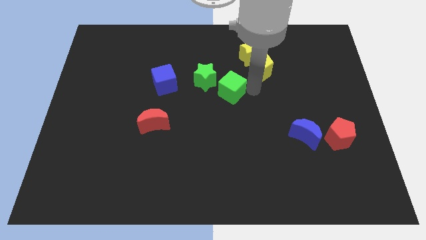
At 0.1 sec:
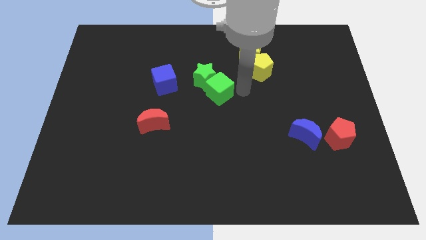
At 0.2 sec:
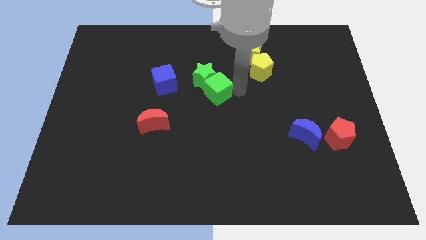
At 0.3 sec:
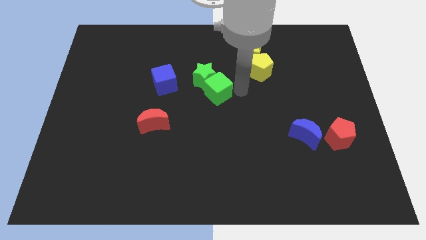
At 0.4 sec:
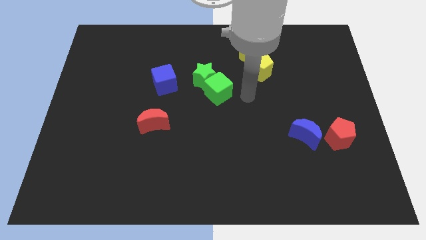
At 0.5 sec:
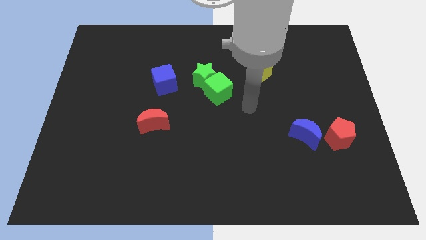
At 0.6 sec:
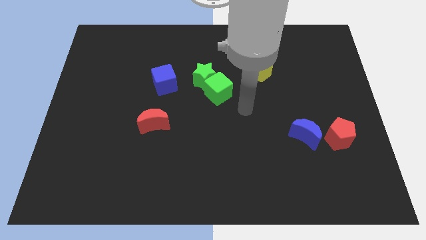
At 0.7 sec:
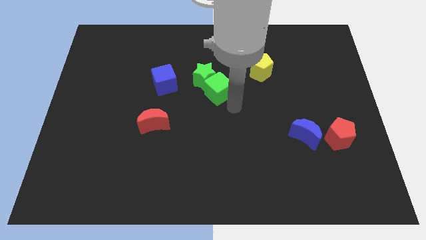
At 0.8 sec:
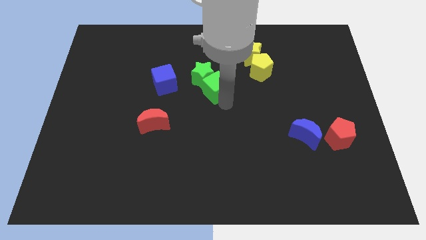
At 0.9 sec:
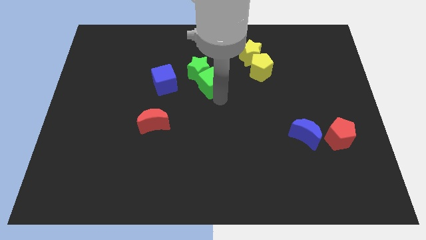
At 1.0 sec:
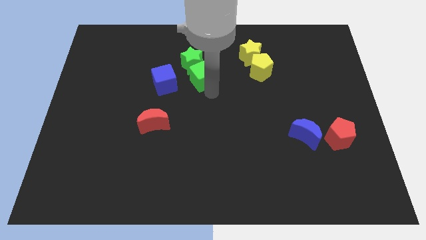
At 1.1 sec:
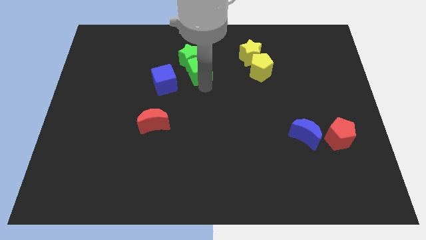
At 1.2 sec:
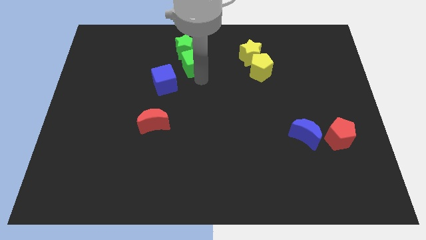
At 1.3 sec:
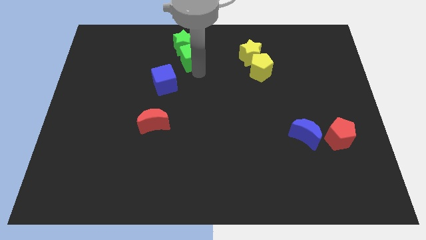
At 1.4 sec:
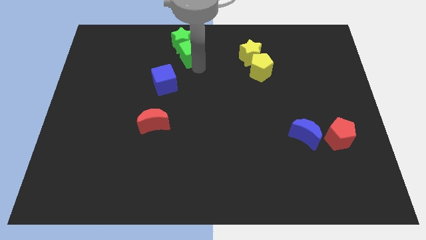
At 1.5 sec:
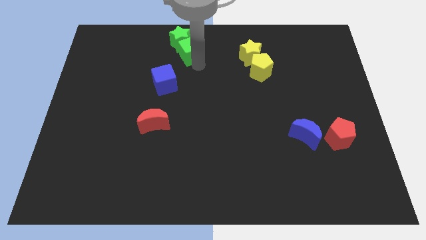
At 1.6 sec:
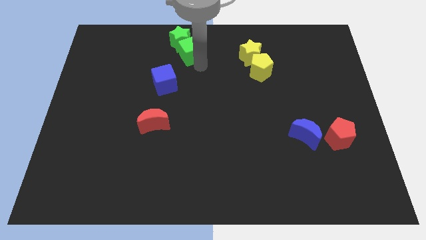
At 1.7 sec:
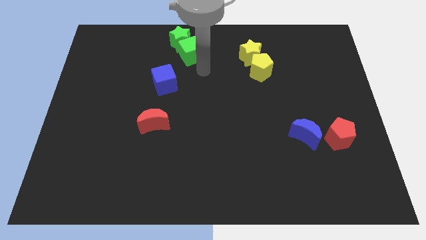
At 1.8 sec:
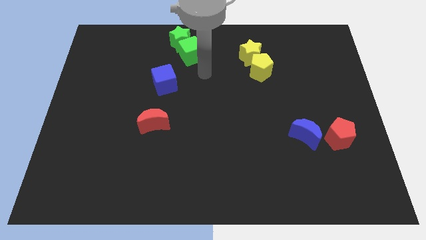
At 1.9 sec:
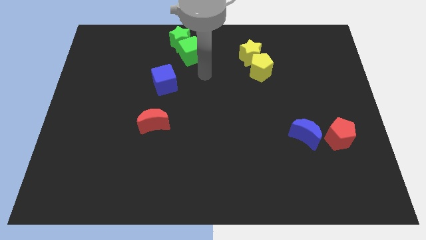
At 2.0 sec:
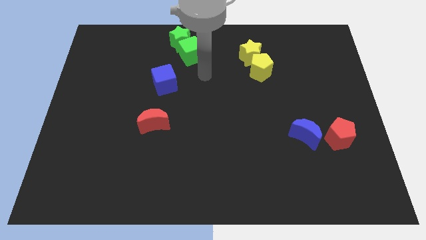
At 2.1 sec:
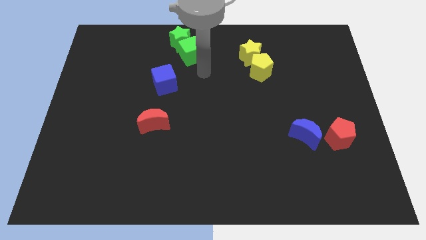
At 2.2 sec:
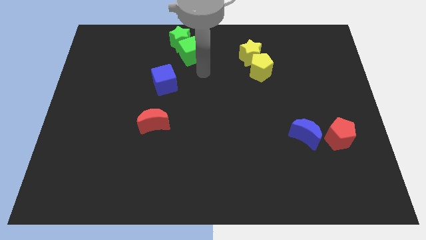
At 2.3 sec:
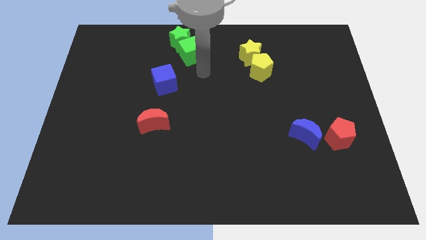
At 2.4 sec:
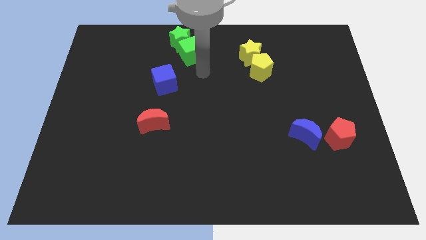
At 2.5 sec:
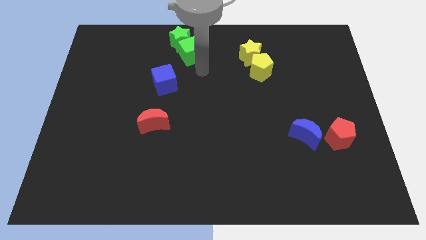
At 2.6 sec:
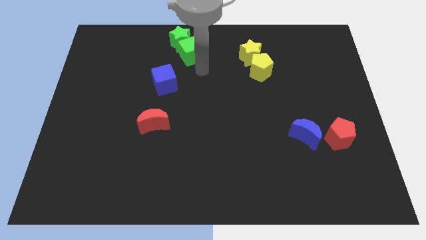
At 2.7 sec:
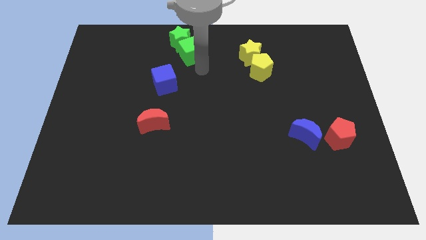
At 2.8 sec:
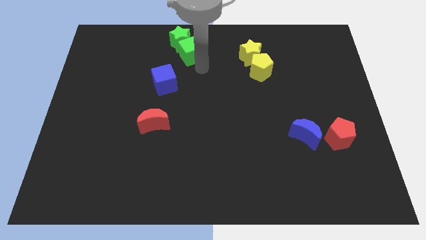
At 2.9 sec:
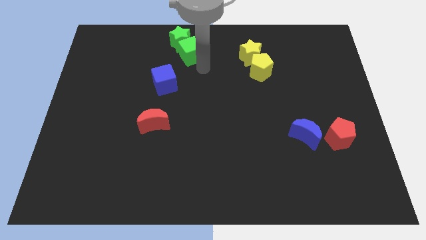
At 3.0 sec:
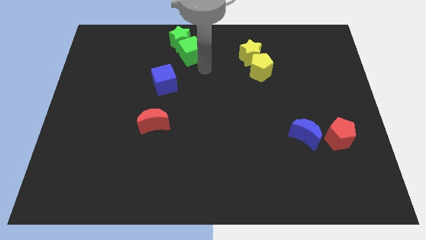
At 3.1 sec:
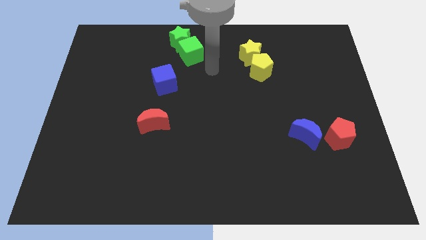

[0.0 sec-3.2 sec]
push the green cube into the green star

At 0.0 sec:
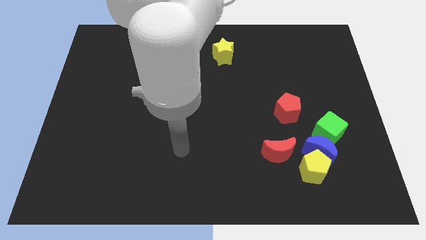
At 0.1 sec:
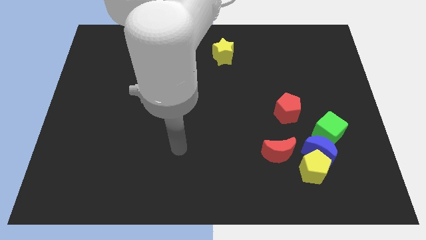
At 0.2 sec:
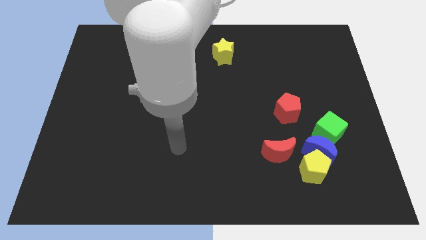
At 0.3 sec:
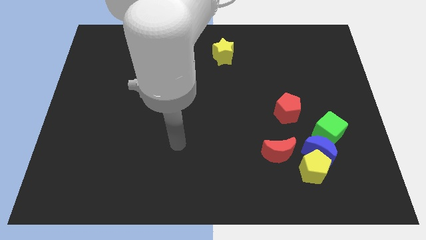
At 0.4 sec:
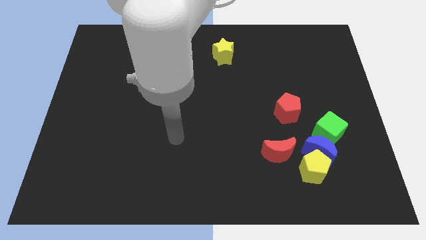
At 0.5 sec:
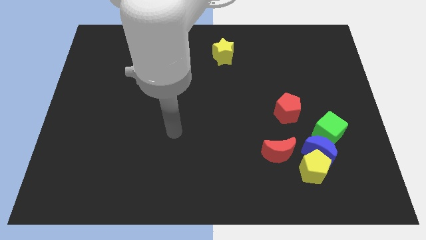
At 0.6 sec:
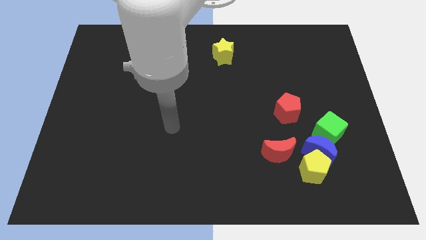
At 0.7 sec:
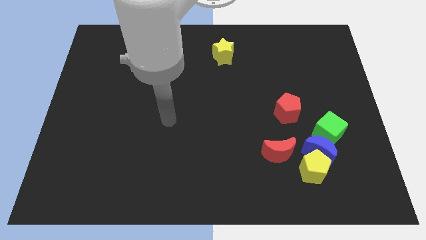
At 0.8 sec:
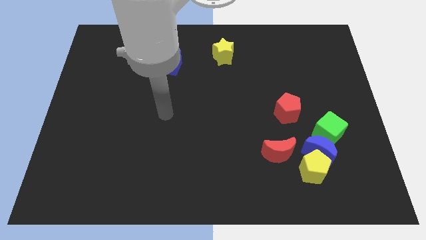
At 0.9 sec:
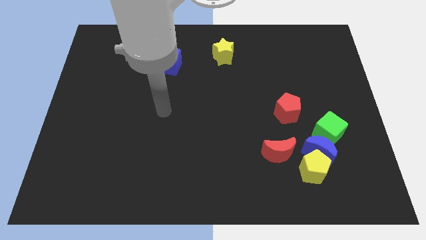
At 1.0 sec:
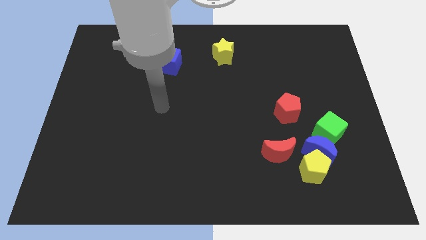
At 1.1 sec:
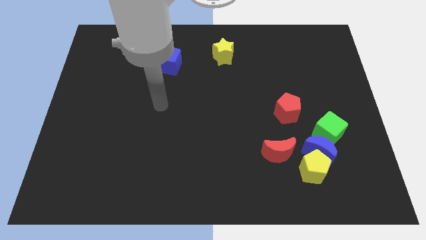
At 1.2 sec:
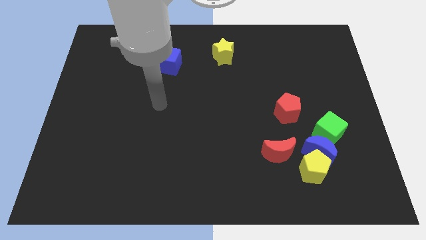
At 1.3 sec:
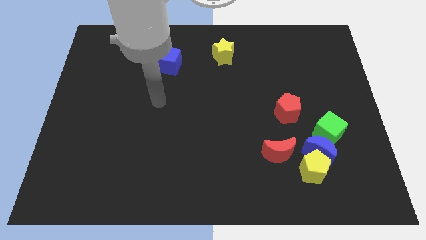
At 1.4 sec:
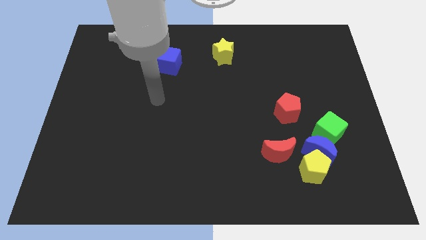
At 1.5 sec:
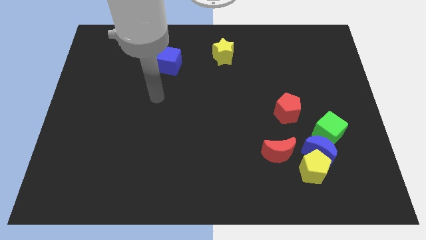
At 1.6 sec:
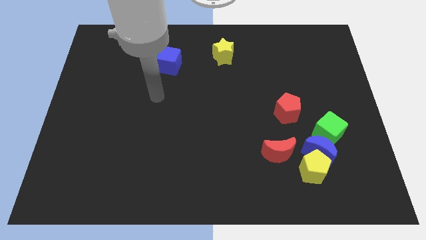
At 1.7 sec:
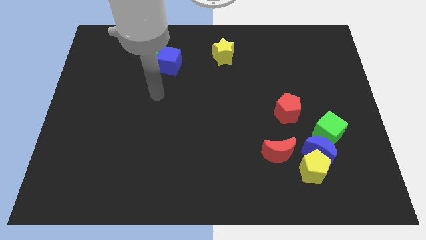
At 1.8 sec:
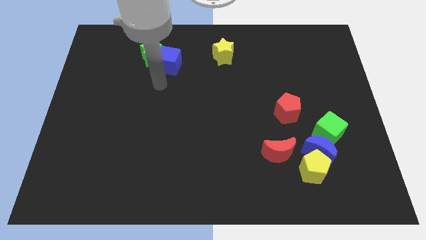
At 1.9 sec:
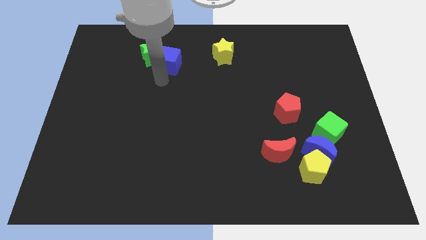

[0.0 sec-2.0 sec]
move your arm close to the blue cube

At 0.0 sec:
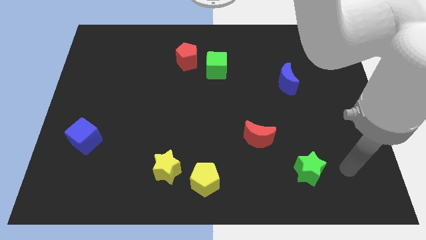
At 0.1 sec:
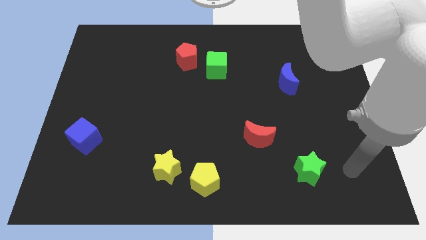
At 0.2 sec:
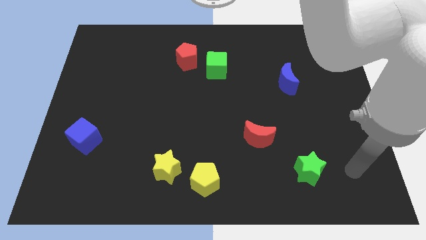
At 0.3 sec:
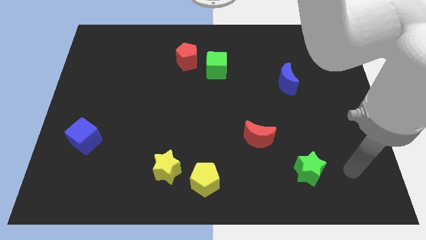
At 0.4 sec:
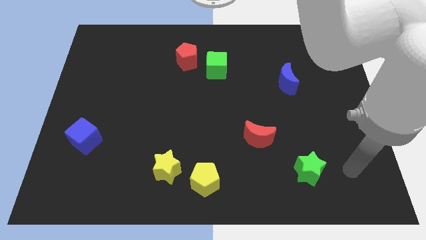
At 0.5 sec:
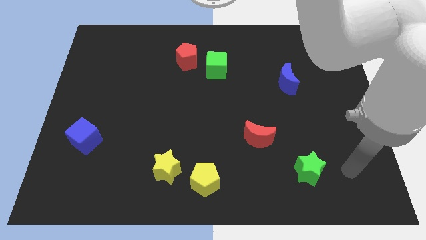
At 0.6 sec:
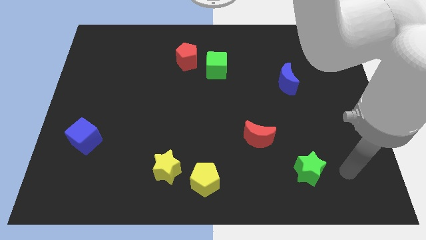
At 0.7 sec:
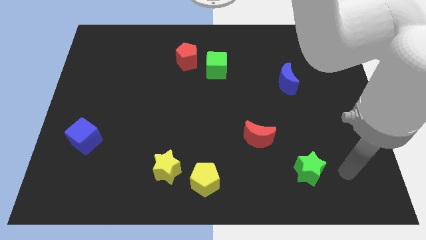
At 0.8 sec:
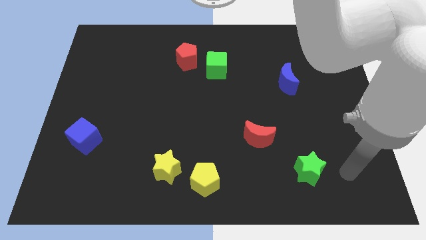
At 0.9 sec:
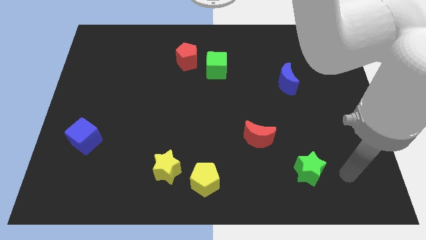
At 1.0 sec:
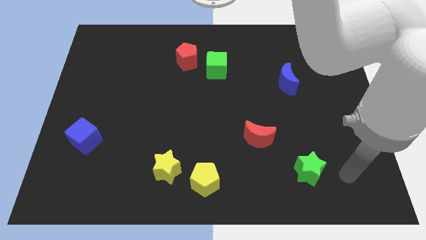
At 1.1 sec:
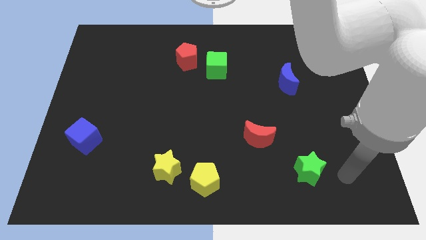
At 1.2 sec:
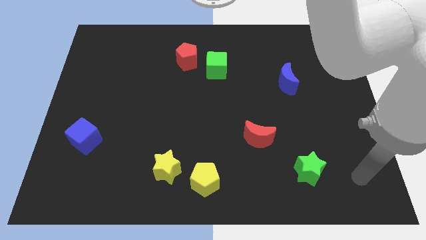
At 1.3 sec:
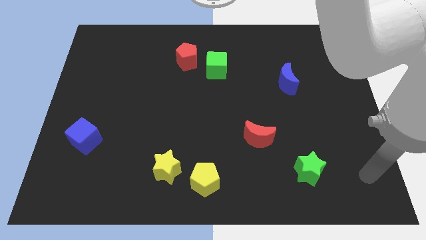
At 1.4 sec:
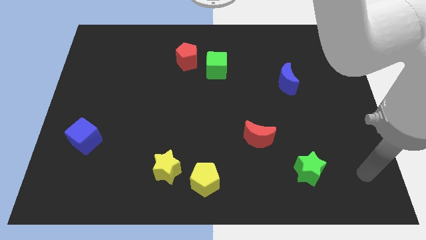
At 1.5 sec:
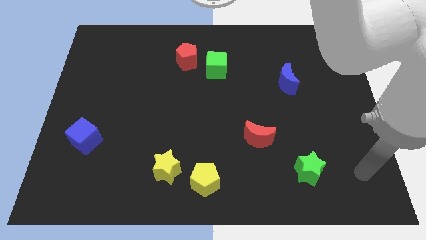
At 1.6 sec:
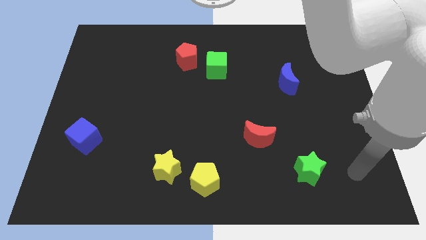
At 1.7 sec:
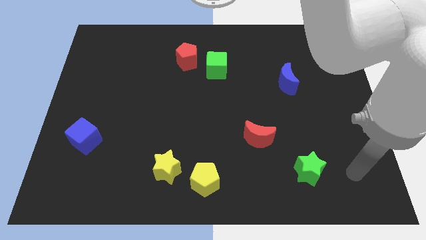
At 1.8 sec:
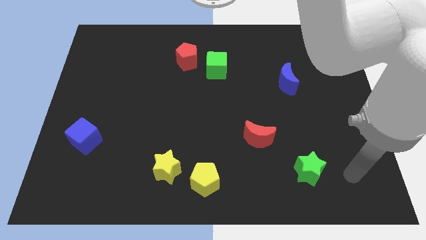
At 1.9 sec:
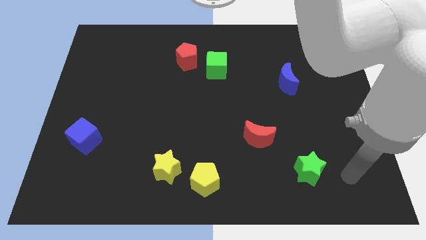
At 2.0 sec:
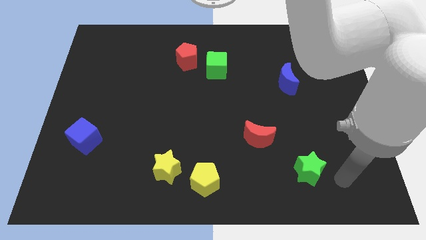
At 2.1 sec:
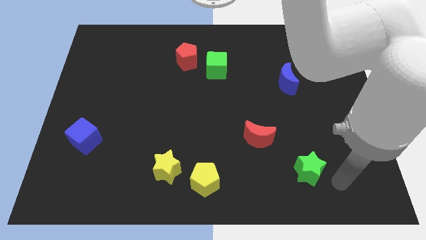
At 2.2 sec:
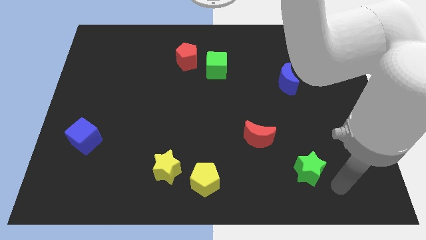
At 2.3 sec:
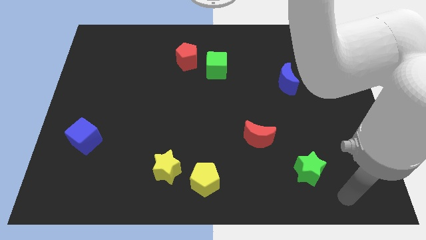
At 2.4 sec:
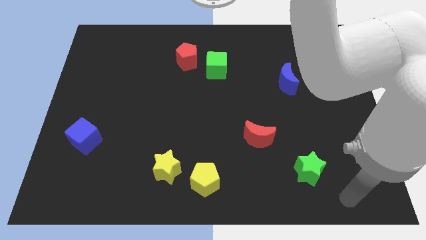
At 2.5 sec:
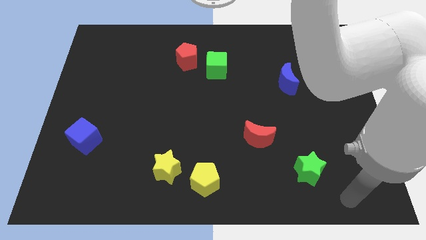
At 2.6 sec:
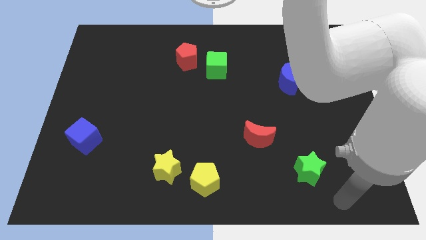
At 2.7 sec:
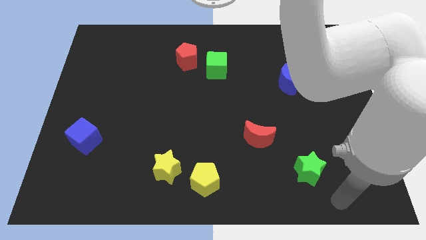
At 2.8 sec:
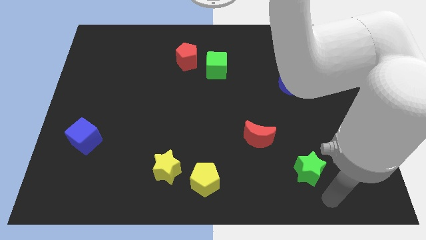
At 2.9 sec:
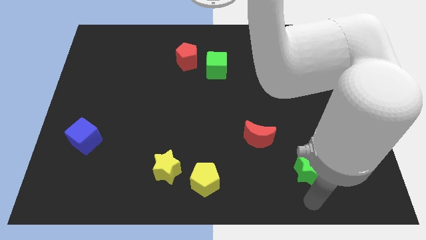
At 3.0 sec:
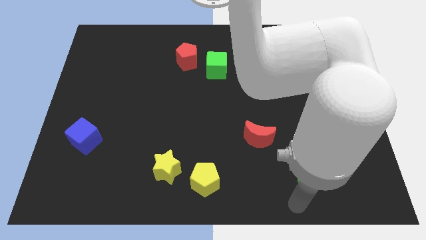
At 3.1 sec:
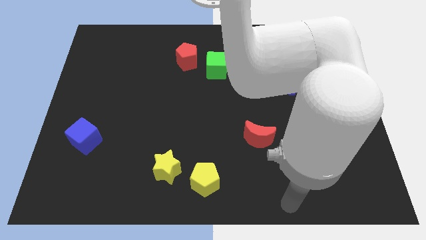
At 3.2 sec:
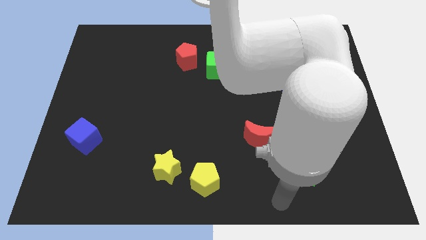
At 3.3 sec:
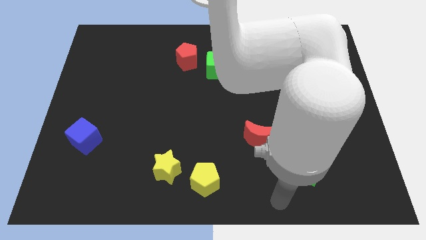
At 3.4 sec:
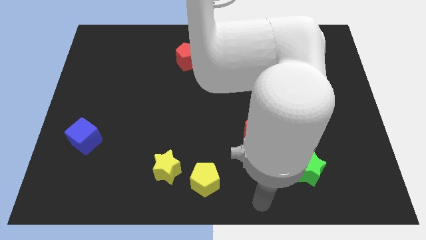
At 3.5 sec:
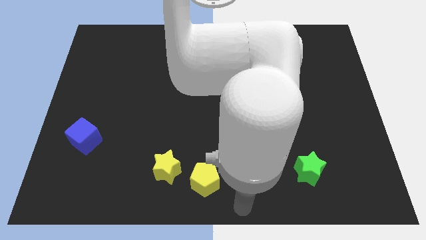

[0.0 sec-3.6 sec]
push arm at the bottom of the board
